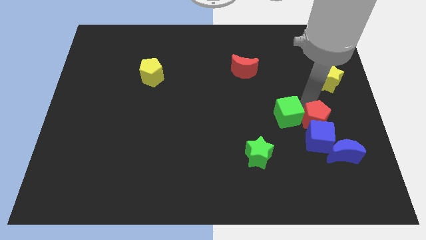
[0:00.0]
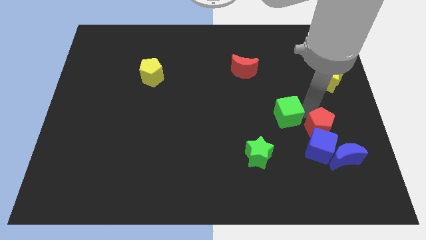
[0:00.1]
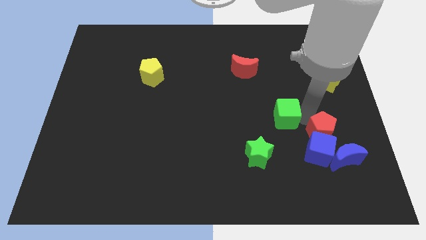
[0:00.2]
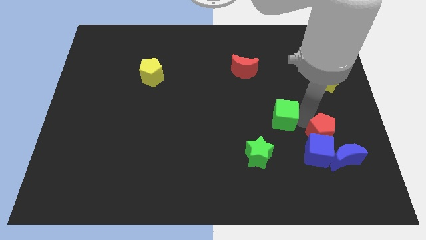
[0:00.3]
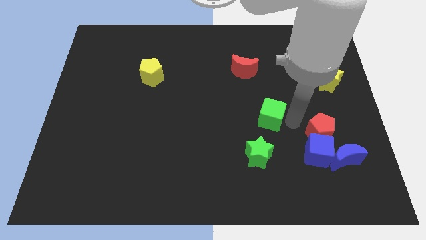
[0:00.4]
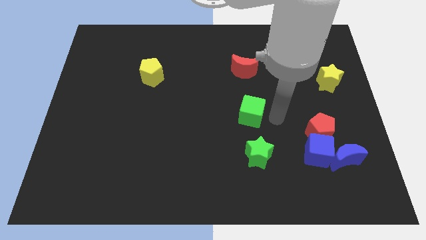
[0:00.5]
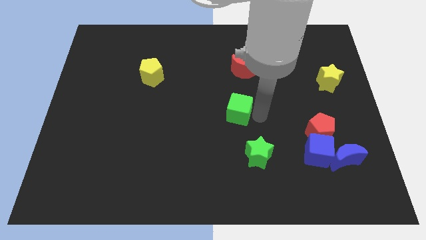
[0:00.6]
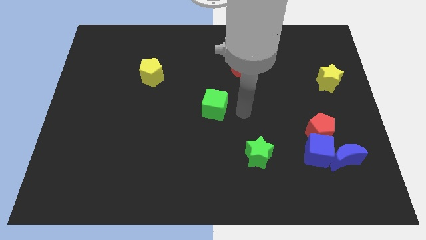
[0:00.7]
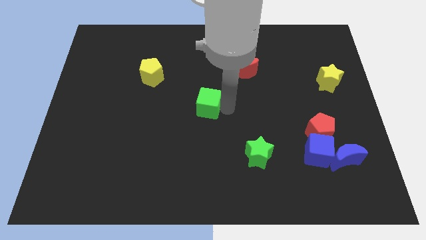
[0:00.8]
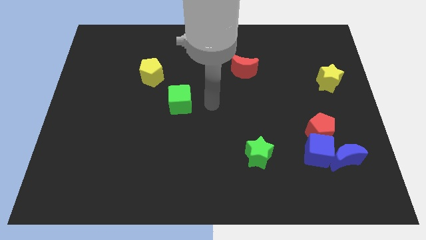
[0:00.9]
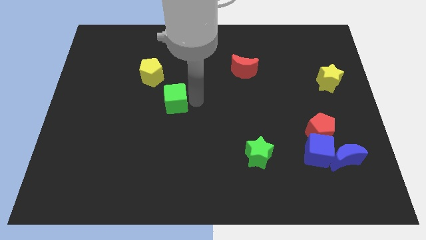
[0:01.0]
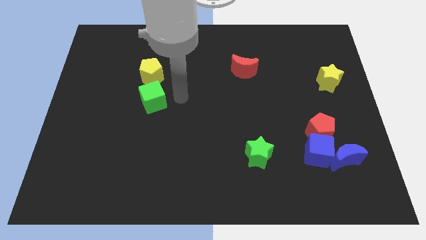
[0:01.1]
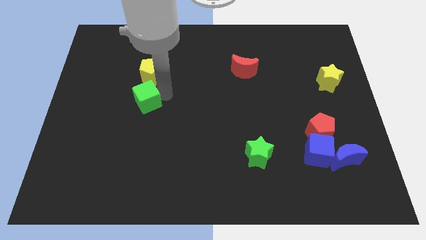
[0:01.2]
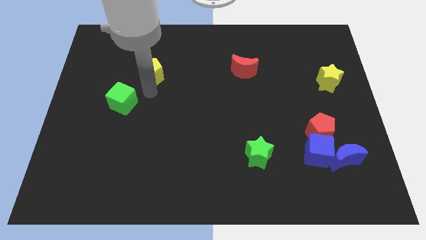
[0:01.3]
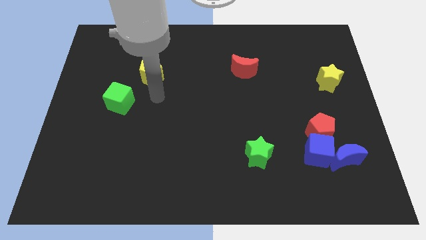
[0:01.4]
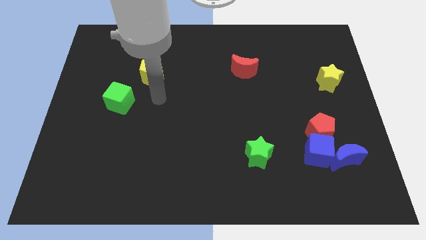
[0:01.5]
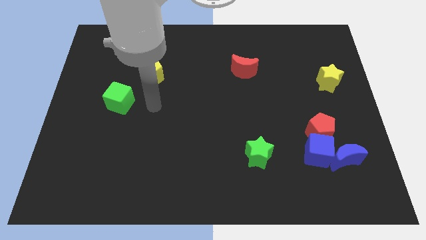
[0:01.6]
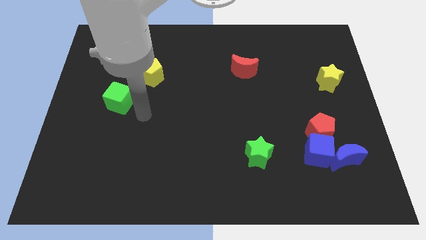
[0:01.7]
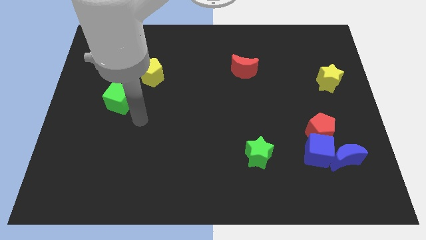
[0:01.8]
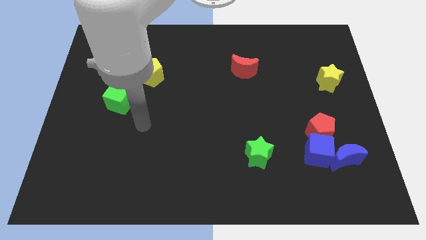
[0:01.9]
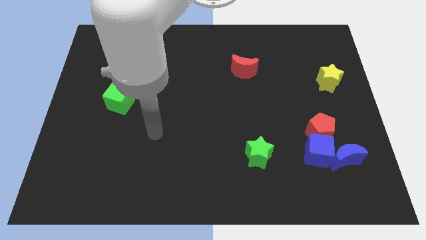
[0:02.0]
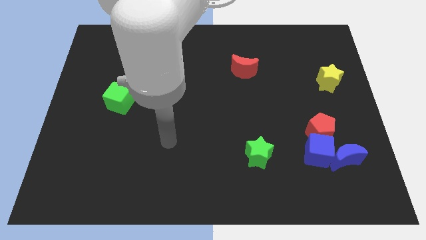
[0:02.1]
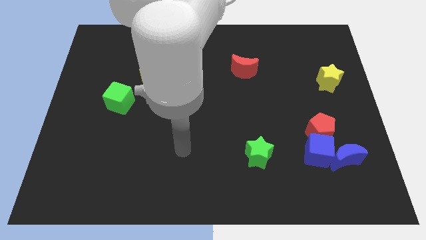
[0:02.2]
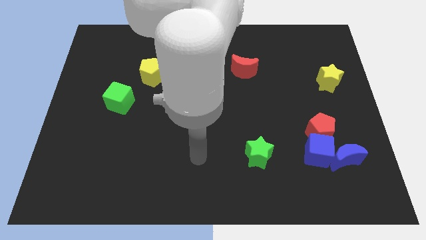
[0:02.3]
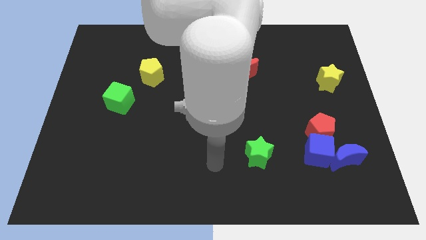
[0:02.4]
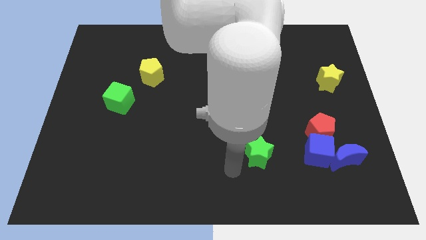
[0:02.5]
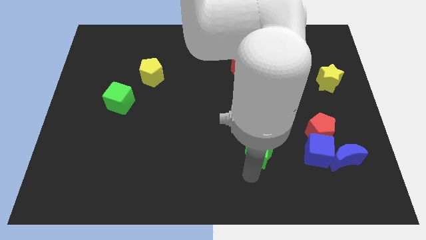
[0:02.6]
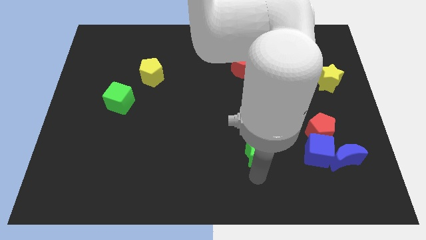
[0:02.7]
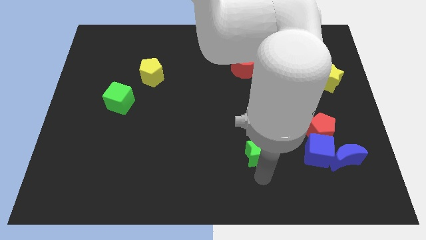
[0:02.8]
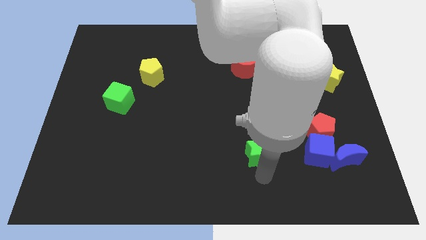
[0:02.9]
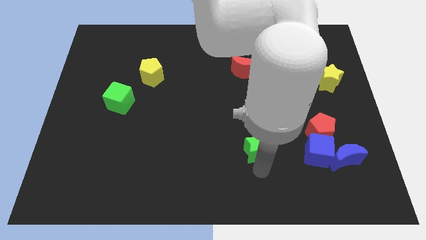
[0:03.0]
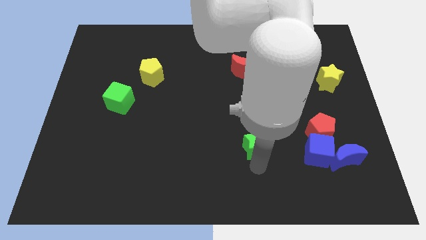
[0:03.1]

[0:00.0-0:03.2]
place your arm below the green star

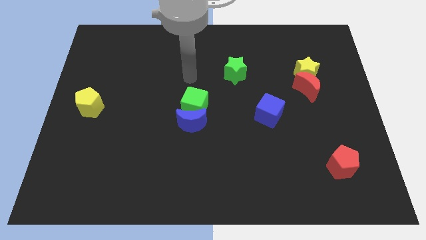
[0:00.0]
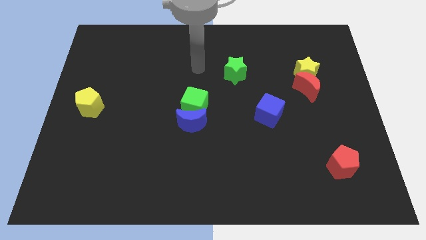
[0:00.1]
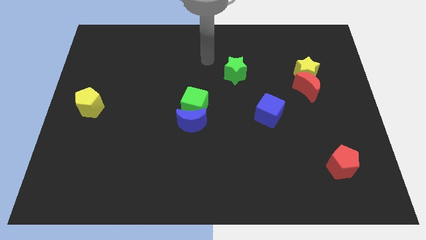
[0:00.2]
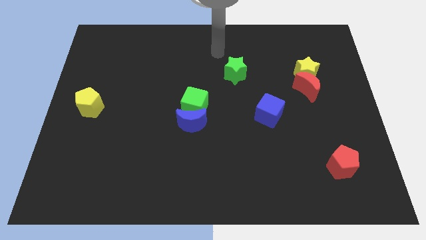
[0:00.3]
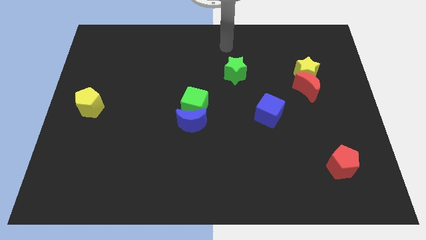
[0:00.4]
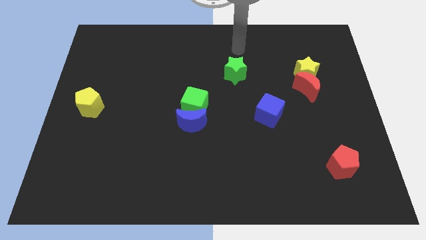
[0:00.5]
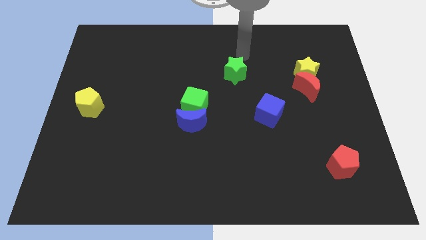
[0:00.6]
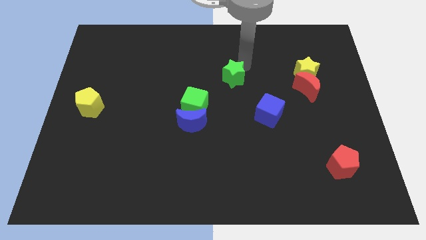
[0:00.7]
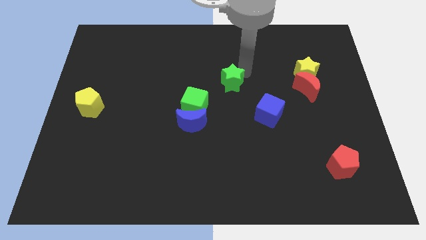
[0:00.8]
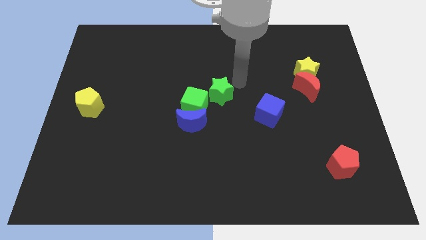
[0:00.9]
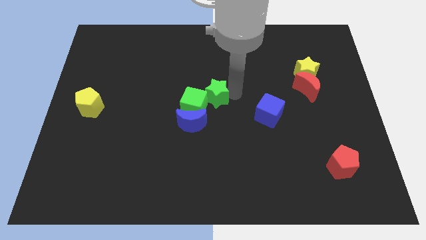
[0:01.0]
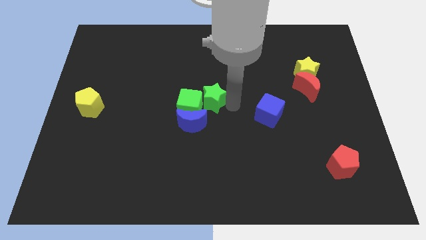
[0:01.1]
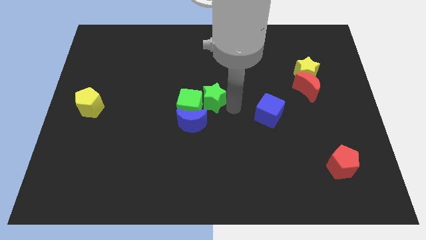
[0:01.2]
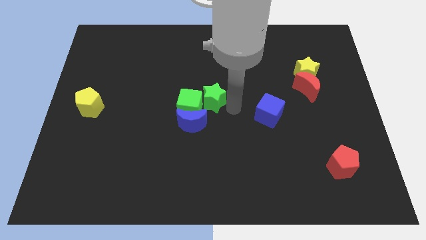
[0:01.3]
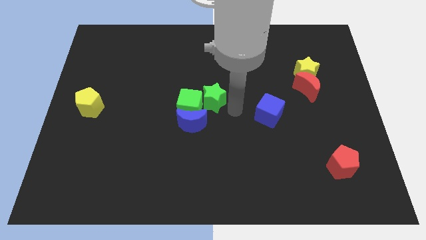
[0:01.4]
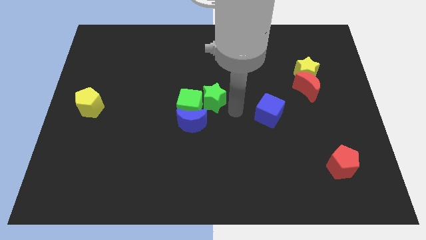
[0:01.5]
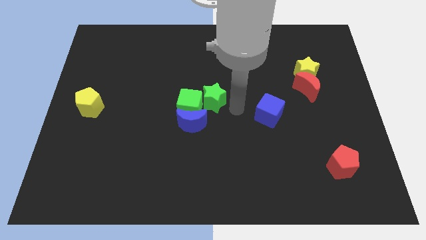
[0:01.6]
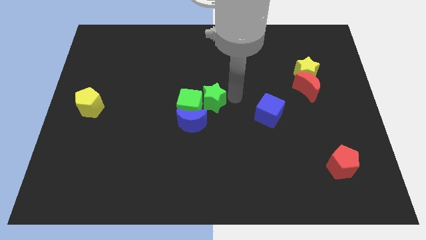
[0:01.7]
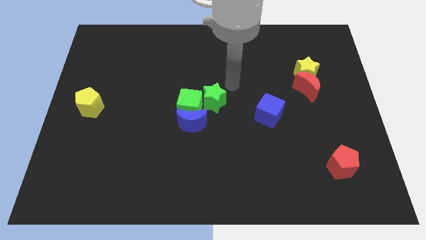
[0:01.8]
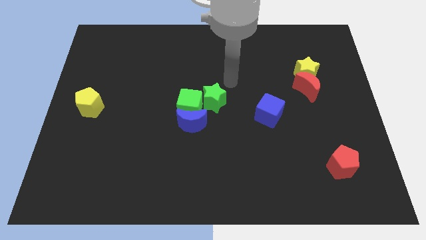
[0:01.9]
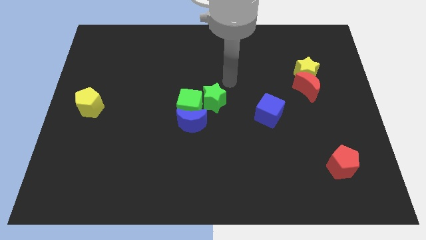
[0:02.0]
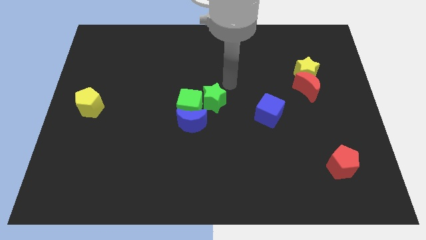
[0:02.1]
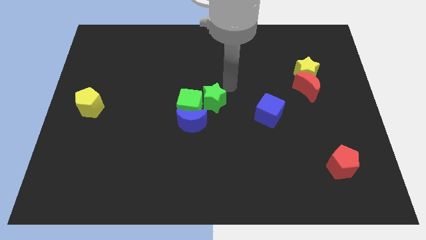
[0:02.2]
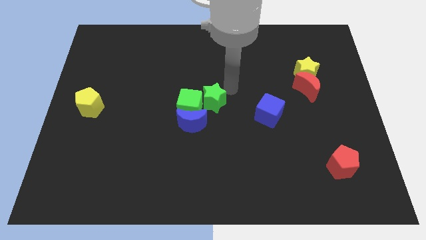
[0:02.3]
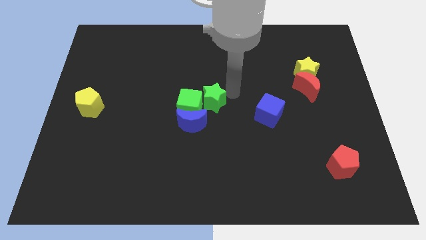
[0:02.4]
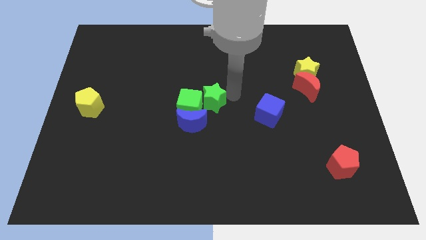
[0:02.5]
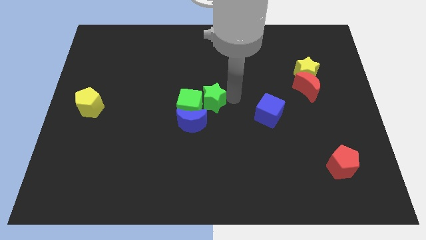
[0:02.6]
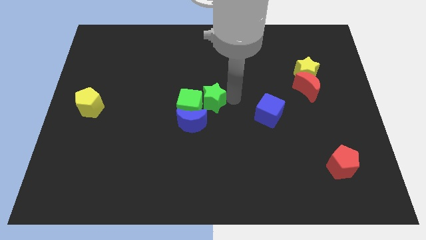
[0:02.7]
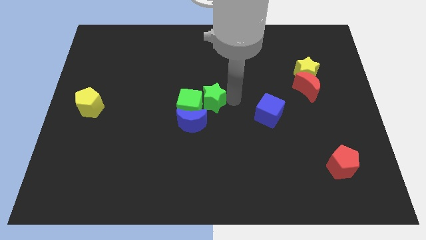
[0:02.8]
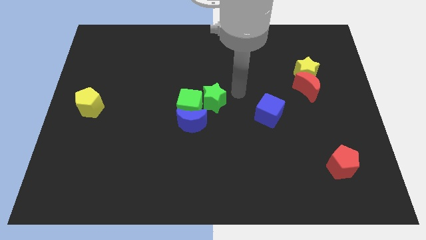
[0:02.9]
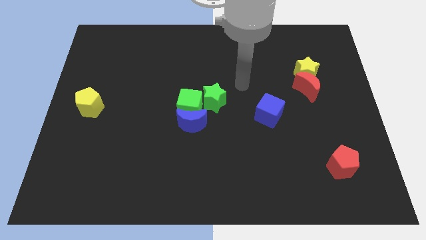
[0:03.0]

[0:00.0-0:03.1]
slide green star to the center

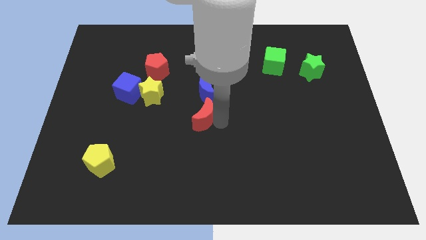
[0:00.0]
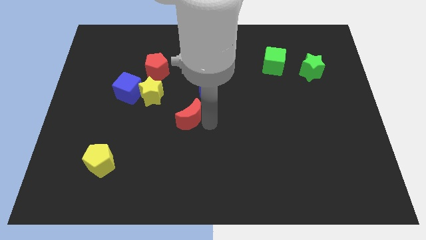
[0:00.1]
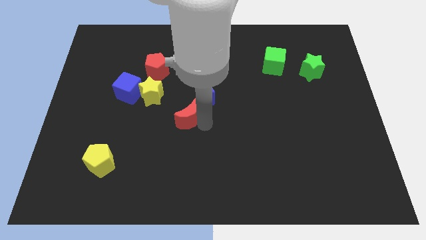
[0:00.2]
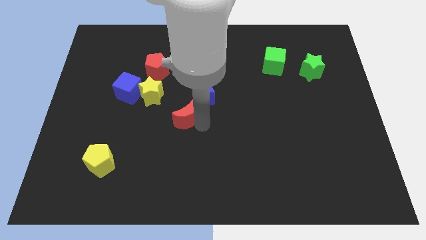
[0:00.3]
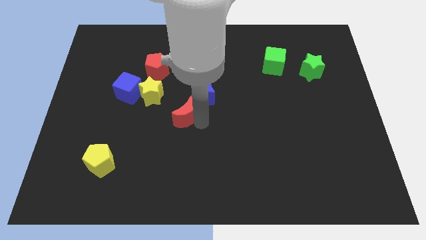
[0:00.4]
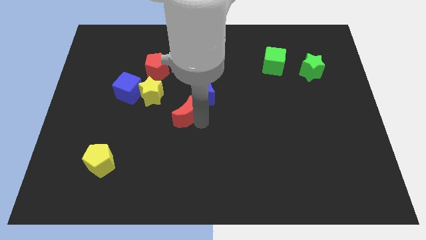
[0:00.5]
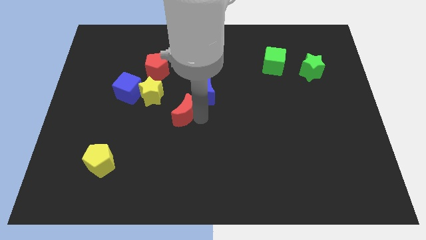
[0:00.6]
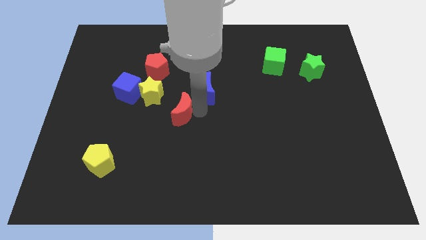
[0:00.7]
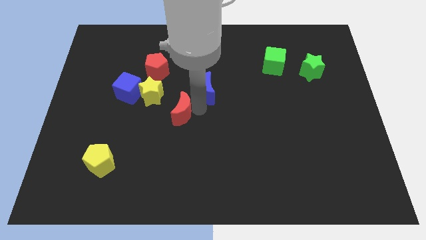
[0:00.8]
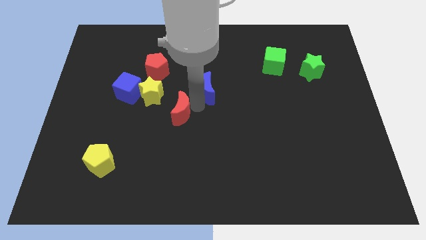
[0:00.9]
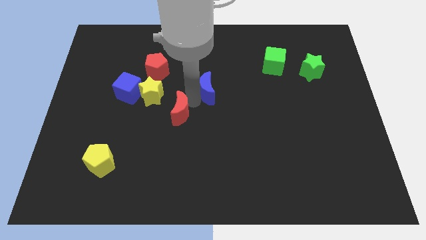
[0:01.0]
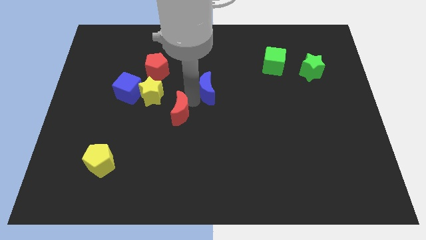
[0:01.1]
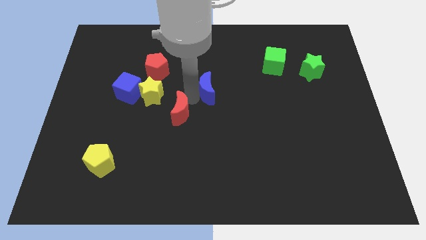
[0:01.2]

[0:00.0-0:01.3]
slide the red moon diagonal at the bottom right of the yellow star

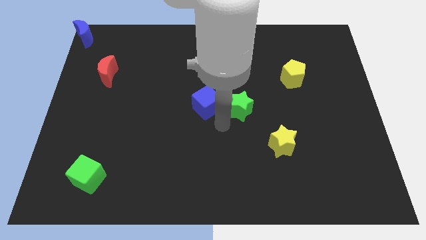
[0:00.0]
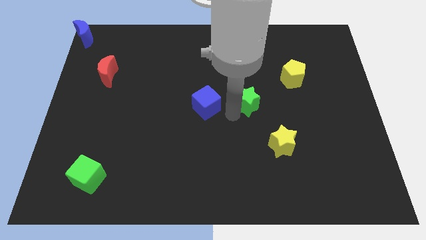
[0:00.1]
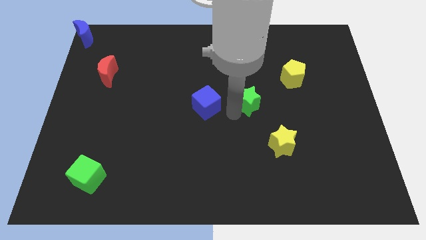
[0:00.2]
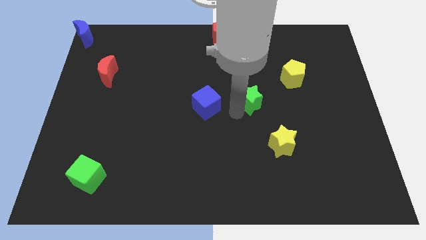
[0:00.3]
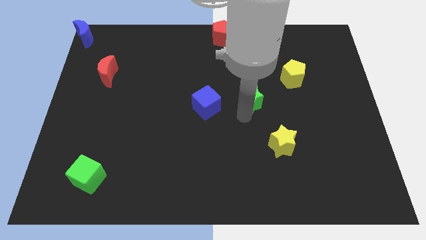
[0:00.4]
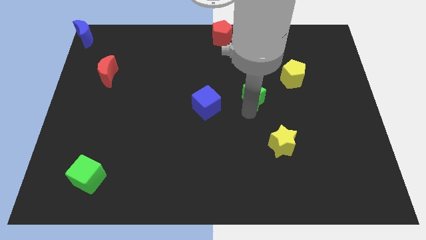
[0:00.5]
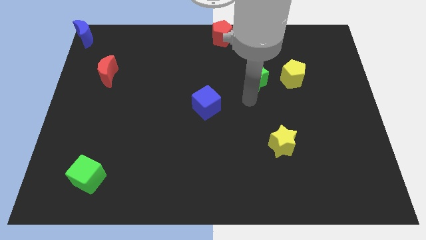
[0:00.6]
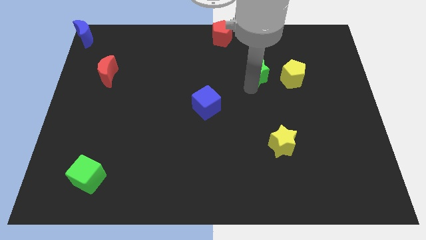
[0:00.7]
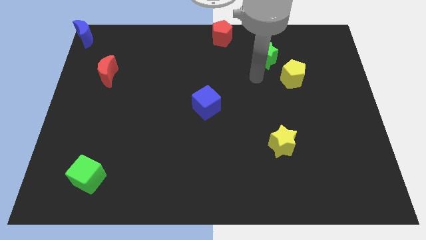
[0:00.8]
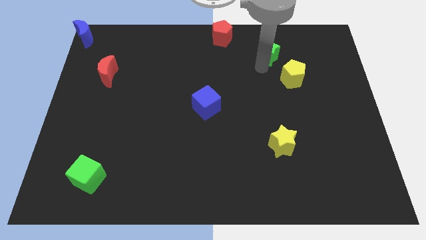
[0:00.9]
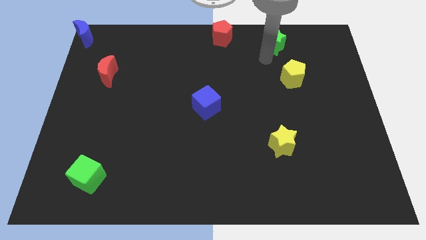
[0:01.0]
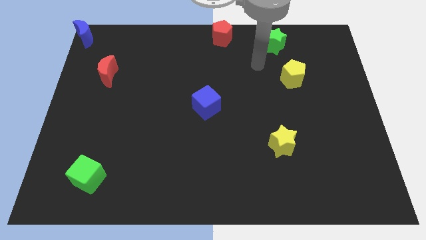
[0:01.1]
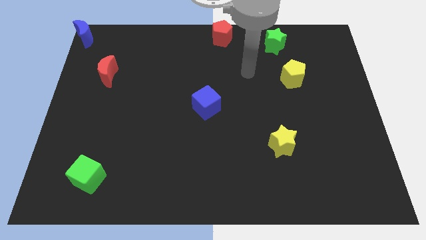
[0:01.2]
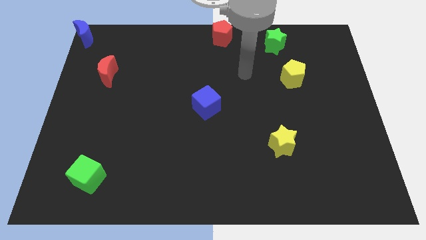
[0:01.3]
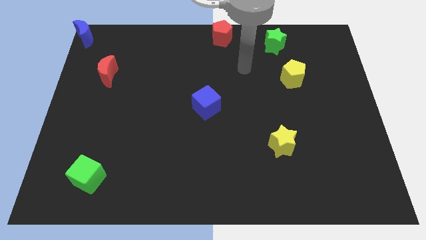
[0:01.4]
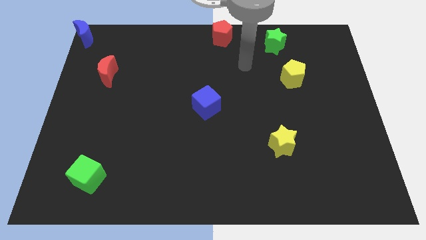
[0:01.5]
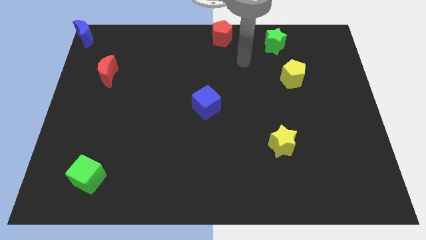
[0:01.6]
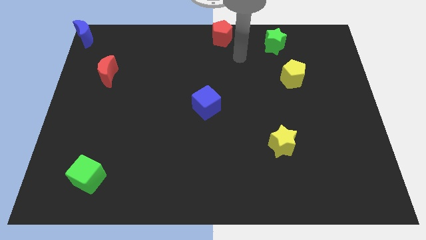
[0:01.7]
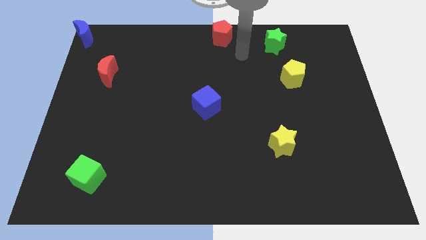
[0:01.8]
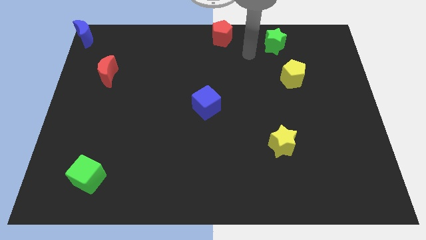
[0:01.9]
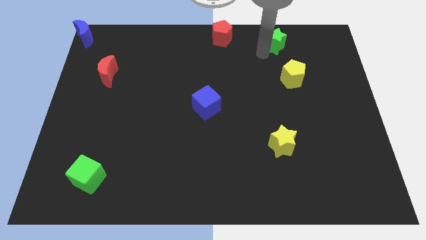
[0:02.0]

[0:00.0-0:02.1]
push the green star above yellow pentagon
